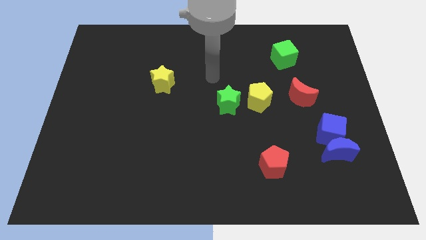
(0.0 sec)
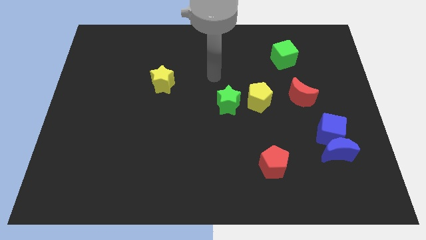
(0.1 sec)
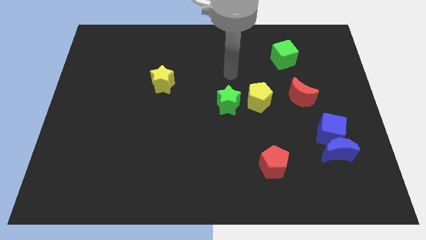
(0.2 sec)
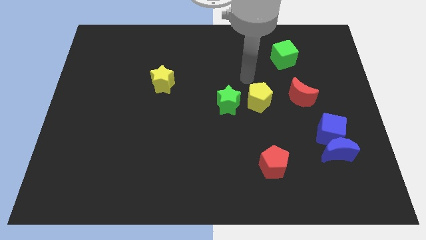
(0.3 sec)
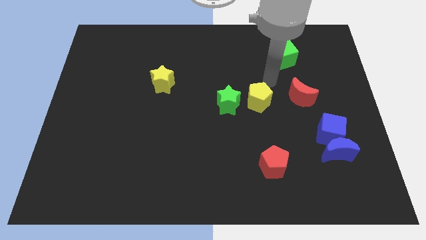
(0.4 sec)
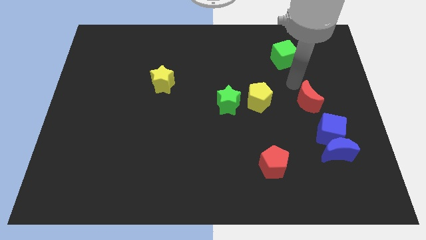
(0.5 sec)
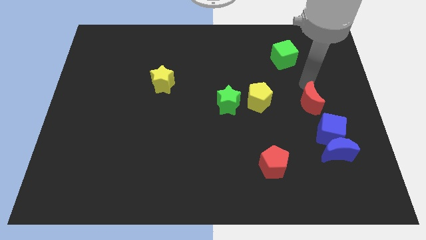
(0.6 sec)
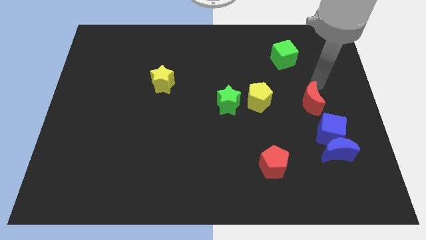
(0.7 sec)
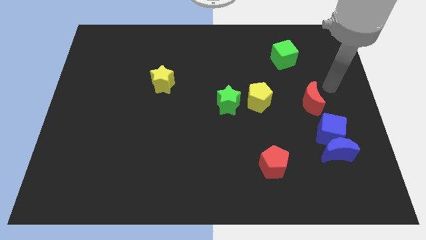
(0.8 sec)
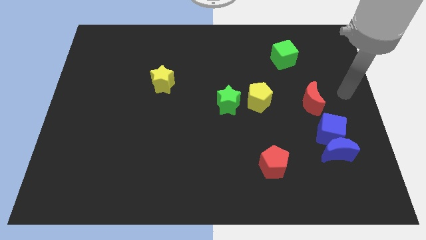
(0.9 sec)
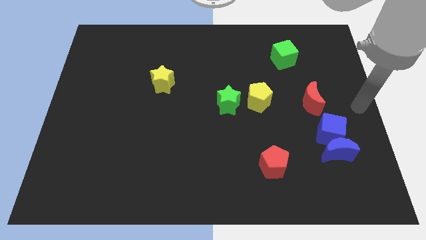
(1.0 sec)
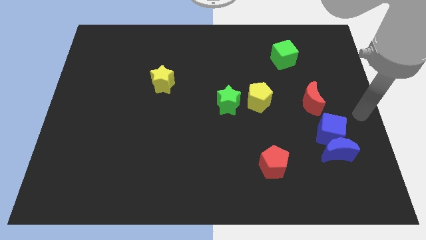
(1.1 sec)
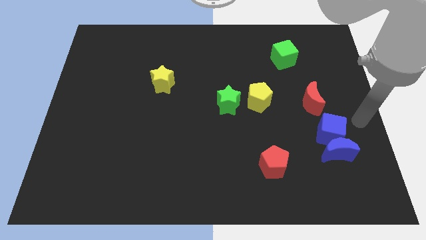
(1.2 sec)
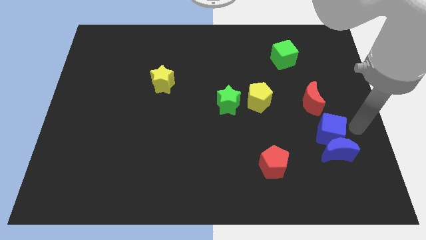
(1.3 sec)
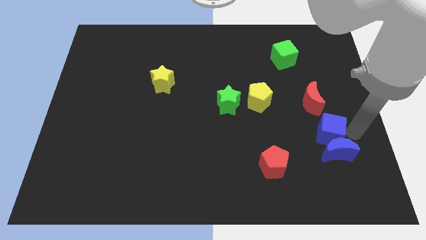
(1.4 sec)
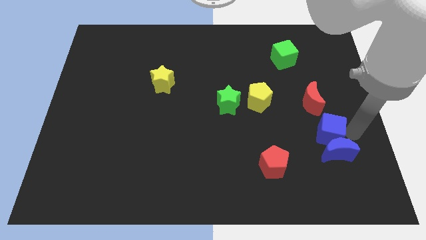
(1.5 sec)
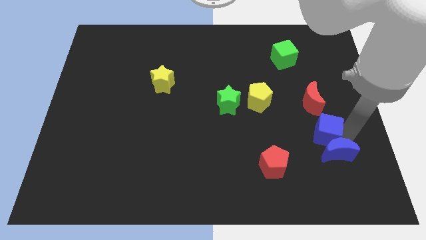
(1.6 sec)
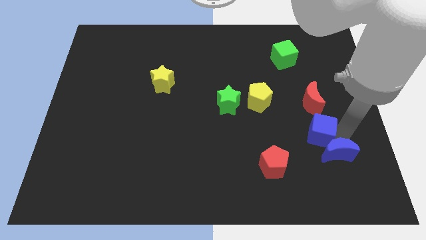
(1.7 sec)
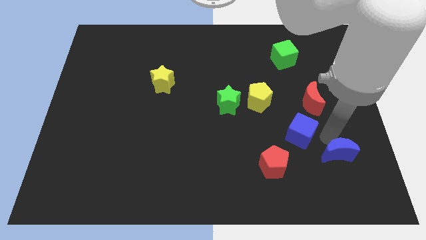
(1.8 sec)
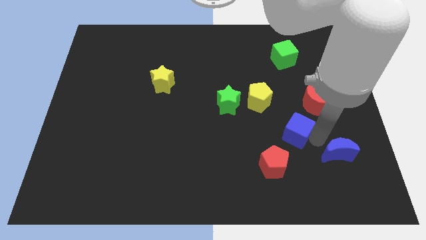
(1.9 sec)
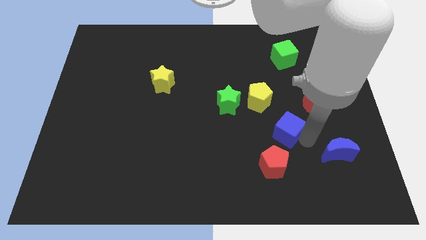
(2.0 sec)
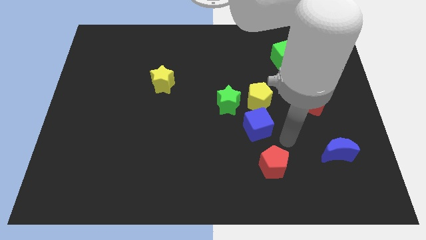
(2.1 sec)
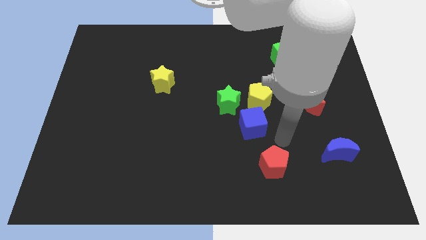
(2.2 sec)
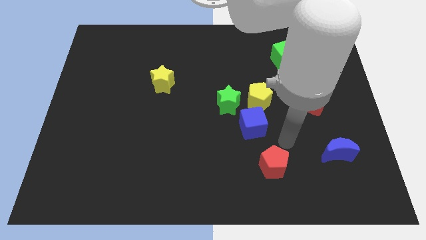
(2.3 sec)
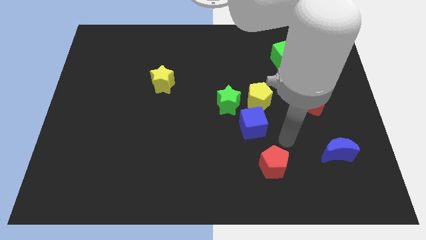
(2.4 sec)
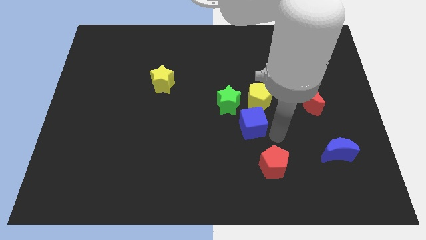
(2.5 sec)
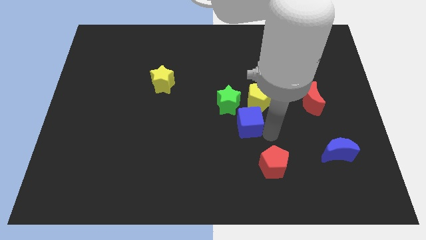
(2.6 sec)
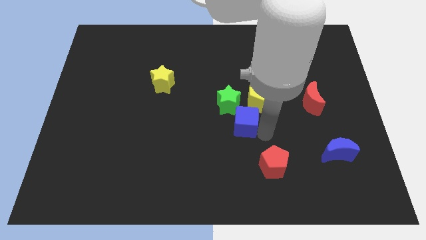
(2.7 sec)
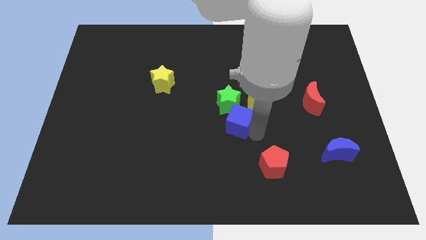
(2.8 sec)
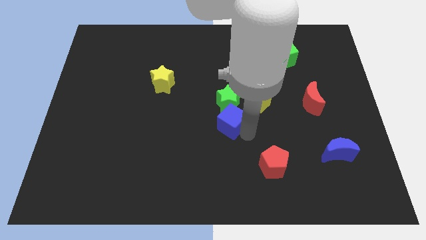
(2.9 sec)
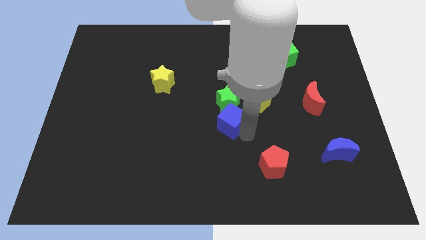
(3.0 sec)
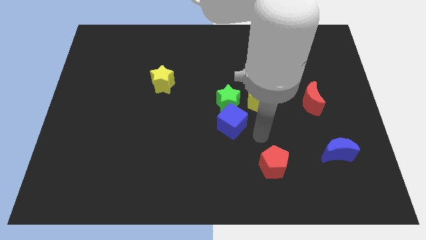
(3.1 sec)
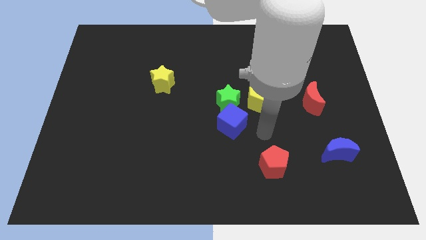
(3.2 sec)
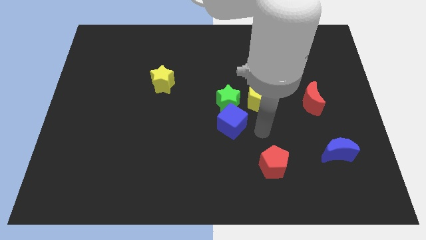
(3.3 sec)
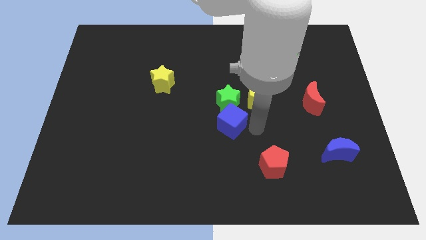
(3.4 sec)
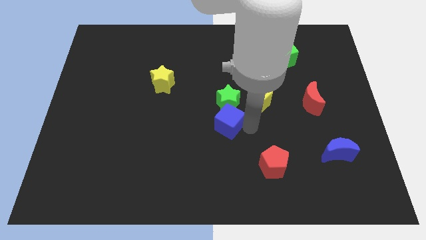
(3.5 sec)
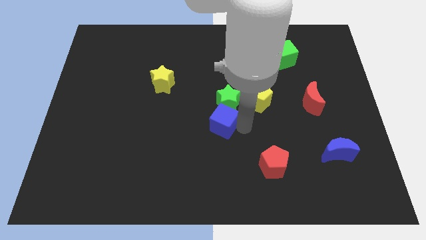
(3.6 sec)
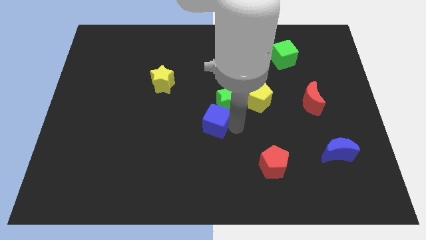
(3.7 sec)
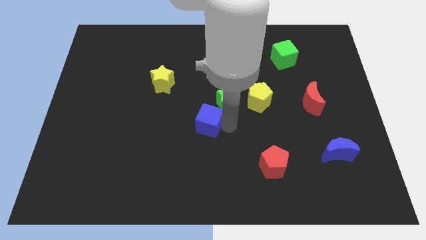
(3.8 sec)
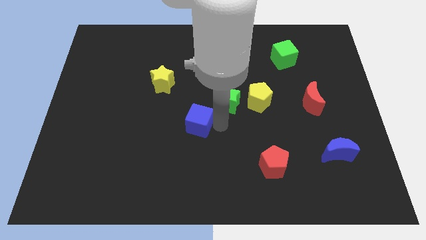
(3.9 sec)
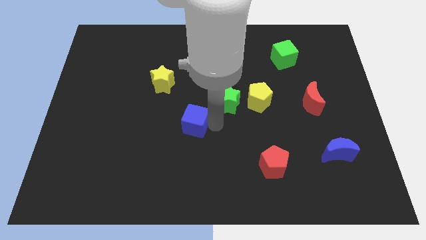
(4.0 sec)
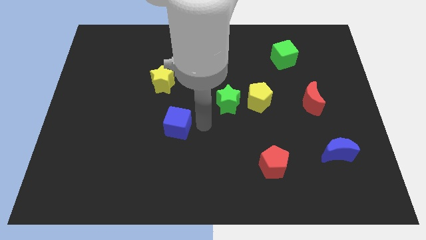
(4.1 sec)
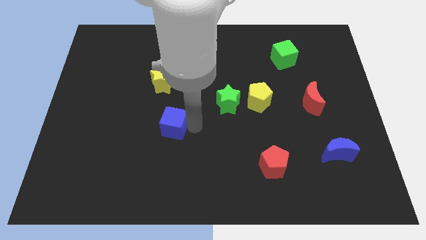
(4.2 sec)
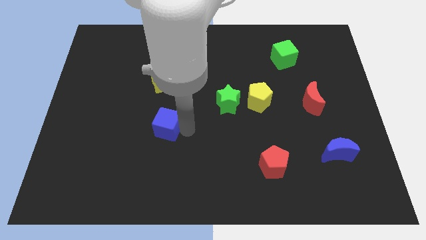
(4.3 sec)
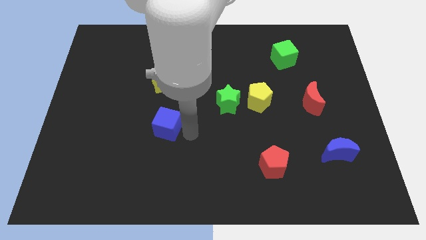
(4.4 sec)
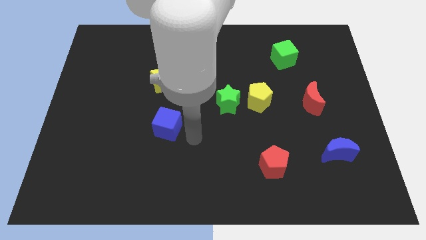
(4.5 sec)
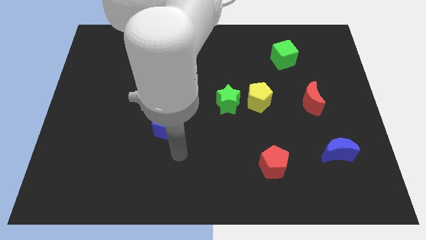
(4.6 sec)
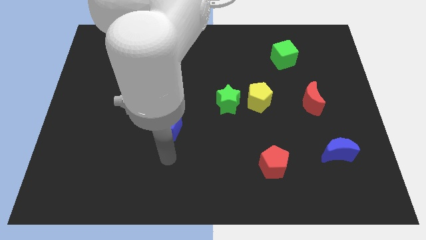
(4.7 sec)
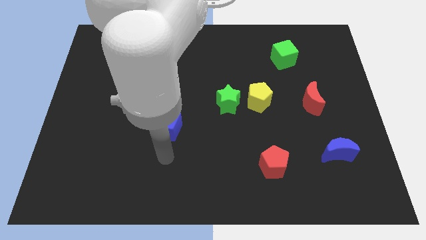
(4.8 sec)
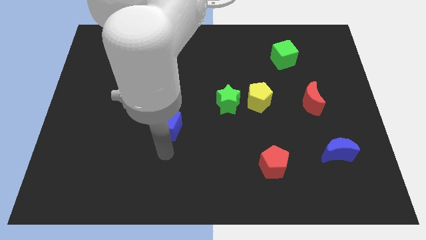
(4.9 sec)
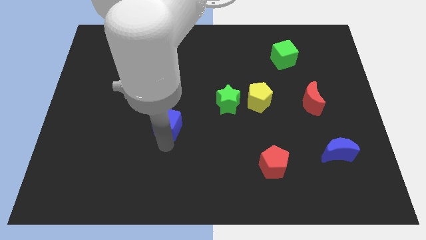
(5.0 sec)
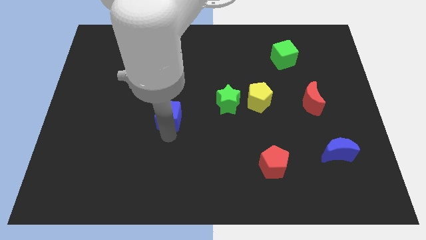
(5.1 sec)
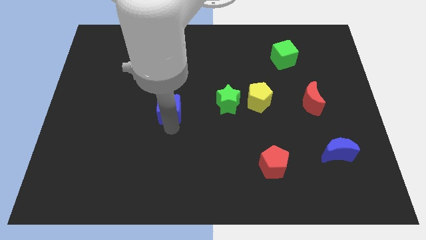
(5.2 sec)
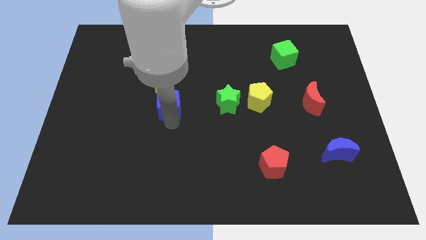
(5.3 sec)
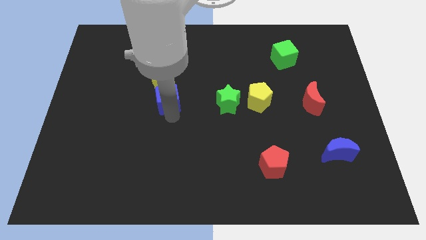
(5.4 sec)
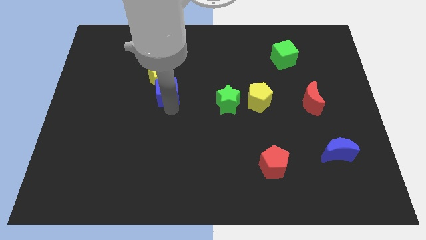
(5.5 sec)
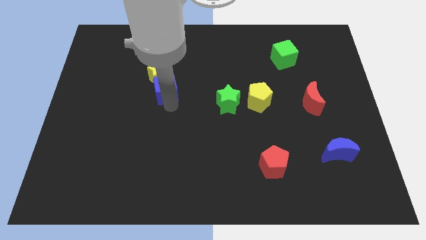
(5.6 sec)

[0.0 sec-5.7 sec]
push the blue cube close to the yellow star

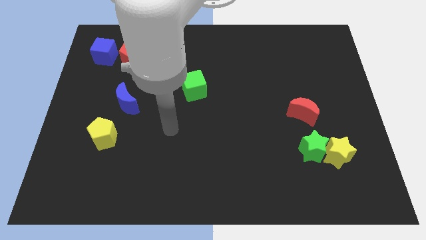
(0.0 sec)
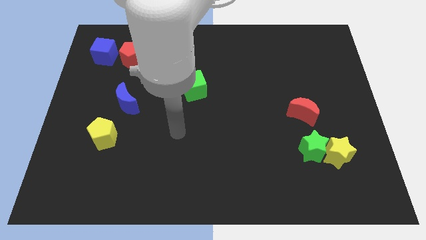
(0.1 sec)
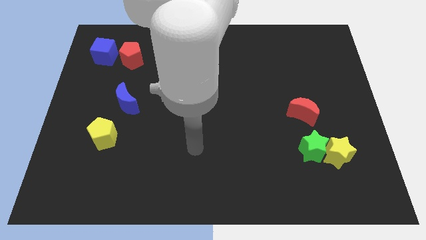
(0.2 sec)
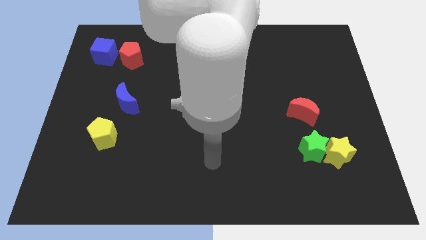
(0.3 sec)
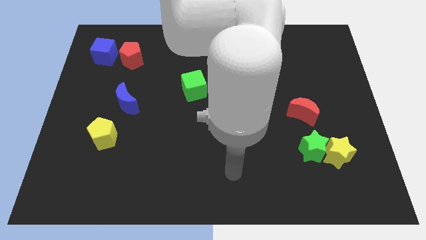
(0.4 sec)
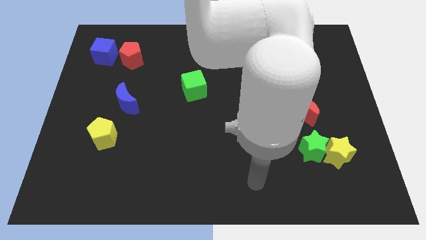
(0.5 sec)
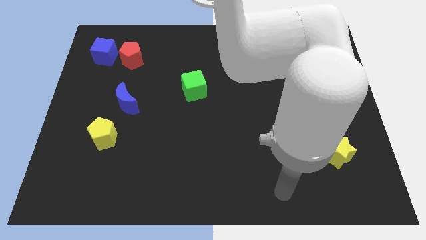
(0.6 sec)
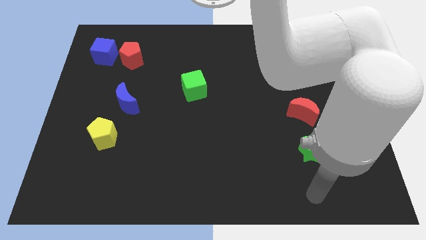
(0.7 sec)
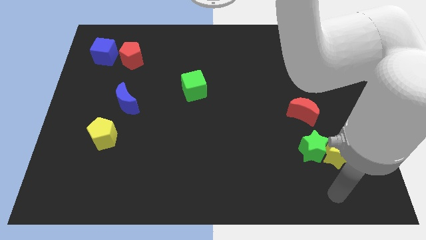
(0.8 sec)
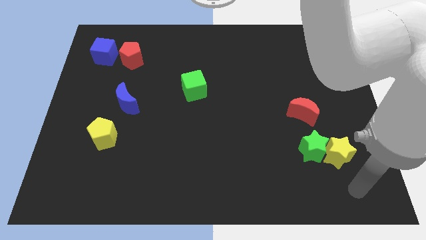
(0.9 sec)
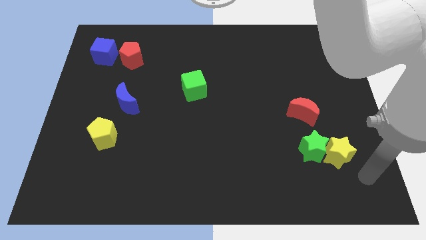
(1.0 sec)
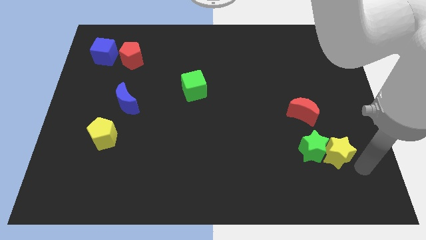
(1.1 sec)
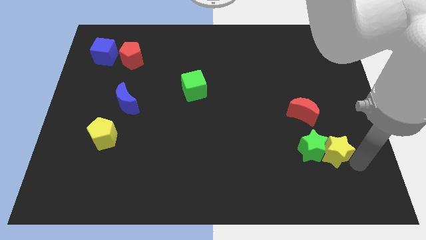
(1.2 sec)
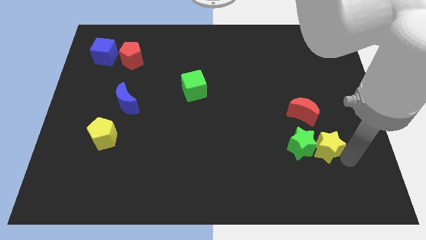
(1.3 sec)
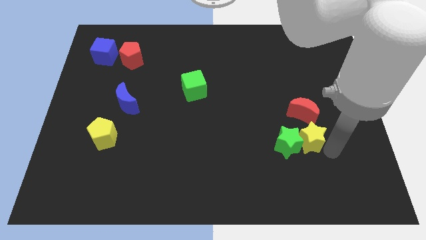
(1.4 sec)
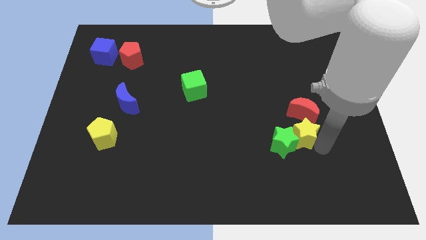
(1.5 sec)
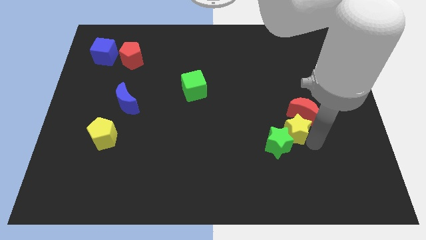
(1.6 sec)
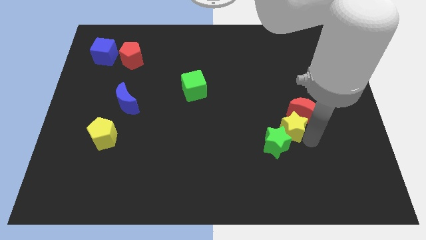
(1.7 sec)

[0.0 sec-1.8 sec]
put the yellow star towards the red moon

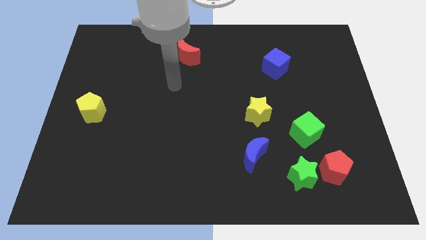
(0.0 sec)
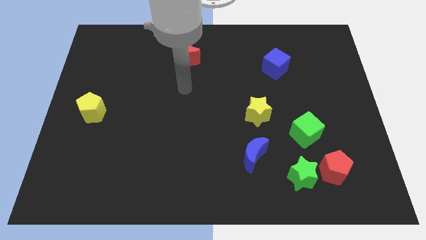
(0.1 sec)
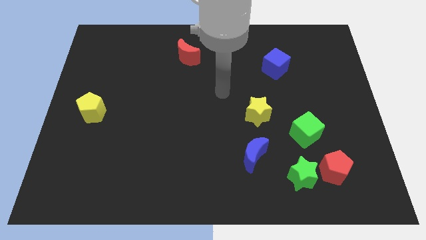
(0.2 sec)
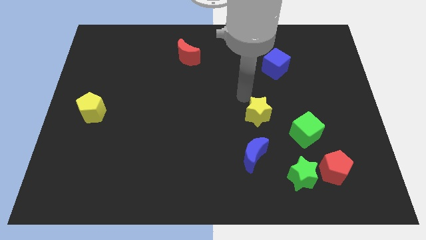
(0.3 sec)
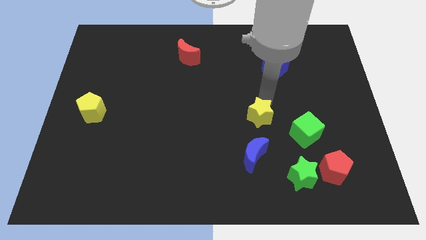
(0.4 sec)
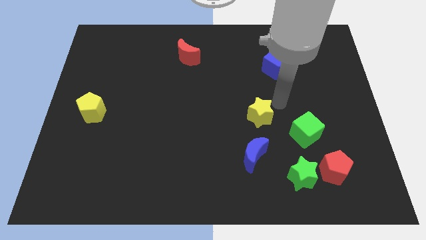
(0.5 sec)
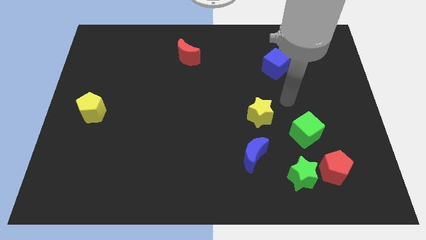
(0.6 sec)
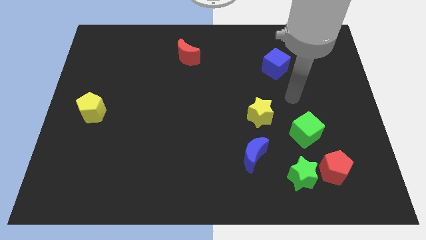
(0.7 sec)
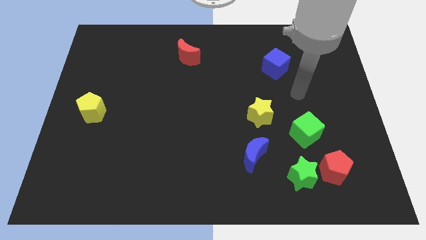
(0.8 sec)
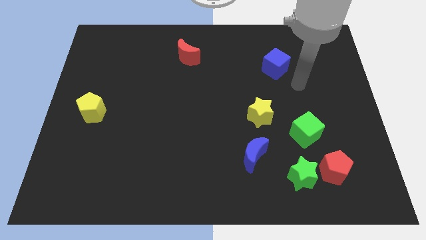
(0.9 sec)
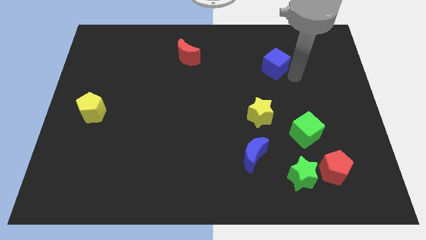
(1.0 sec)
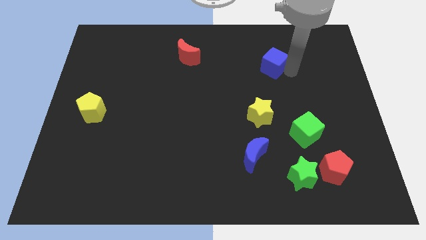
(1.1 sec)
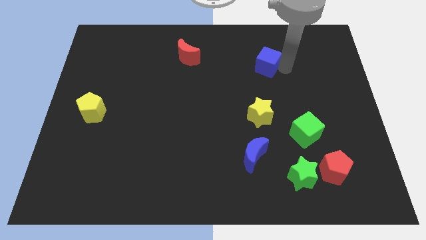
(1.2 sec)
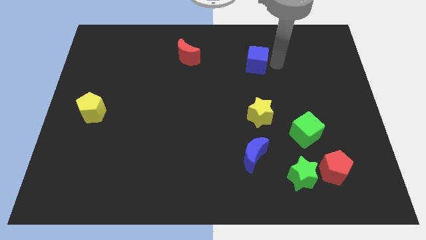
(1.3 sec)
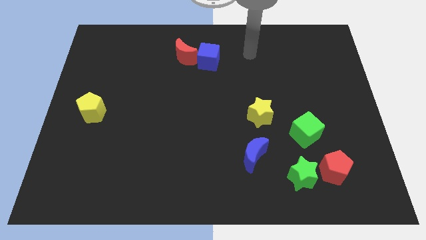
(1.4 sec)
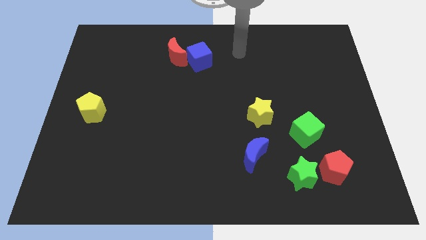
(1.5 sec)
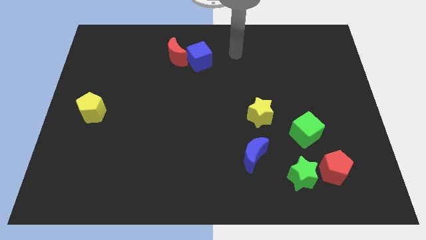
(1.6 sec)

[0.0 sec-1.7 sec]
push the blue cube close to the red moon
